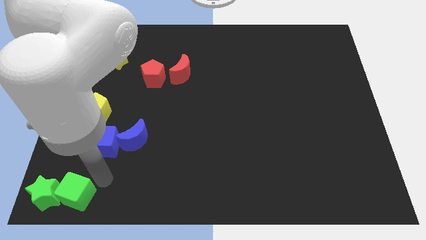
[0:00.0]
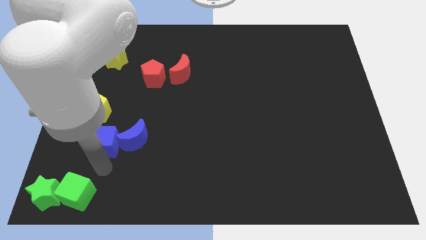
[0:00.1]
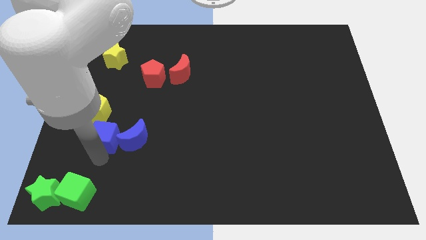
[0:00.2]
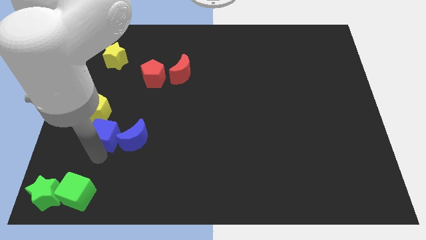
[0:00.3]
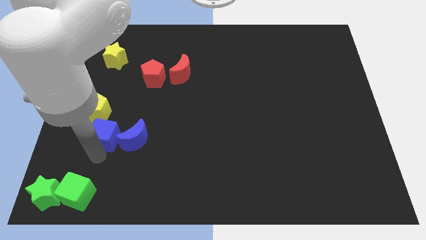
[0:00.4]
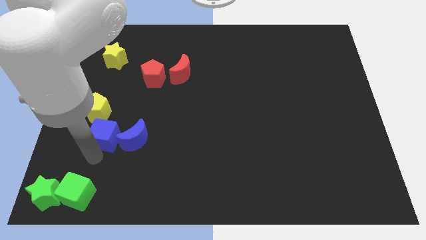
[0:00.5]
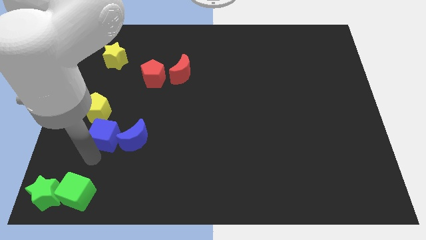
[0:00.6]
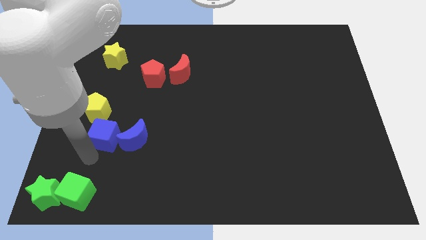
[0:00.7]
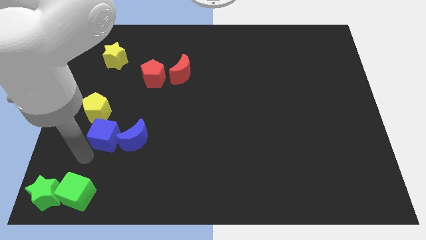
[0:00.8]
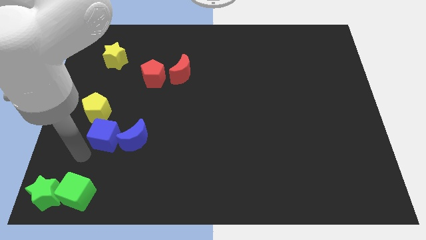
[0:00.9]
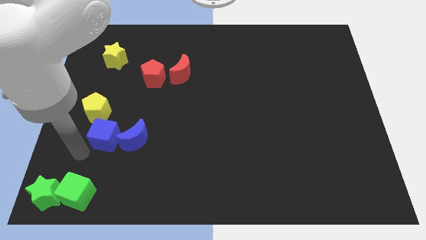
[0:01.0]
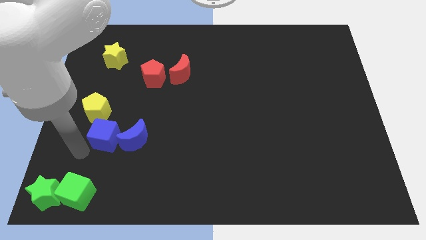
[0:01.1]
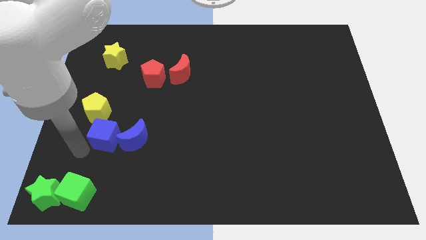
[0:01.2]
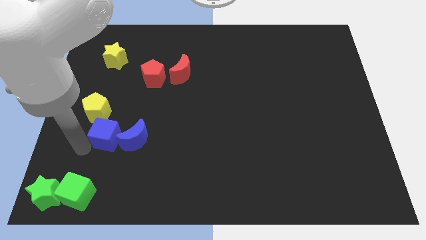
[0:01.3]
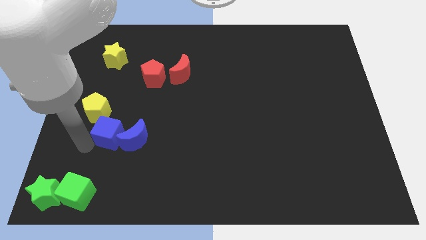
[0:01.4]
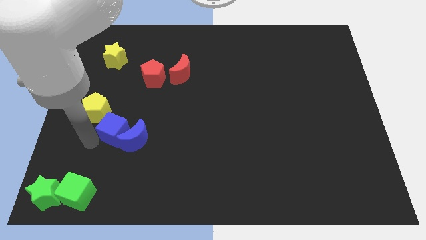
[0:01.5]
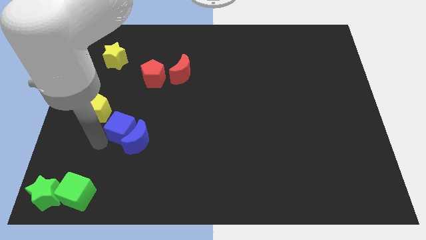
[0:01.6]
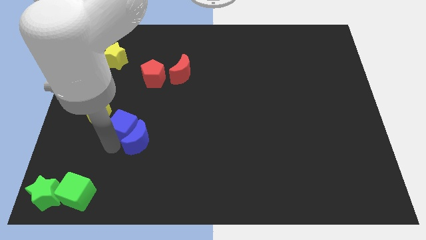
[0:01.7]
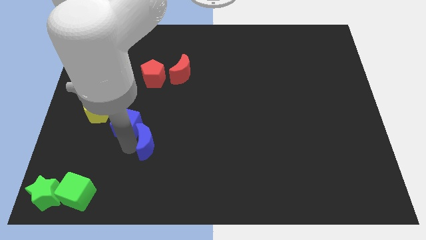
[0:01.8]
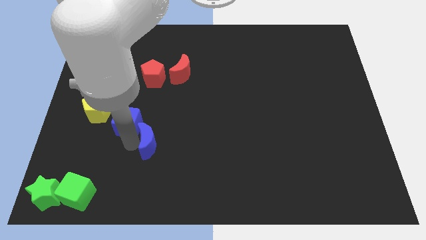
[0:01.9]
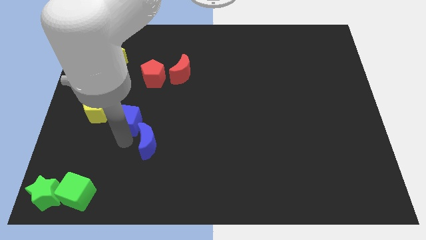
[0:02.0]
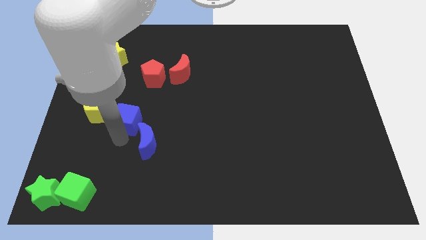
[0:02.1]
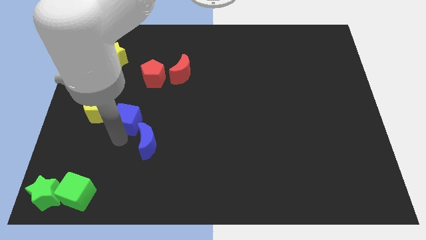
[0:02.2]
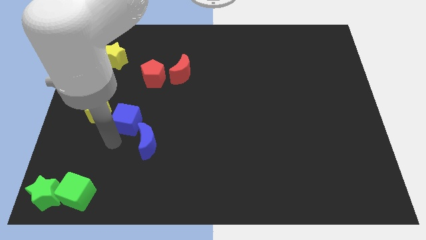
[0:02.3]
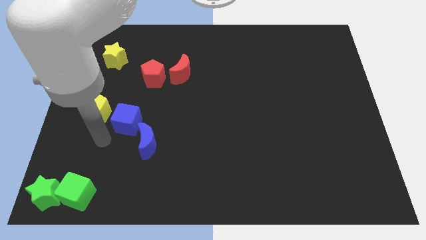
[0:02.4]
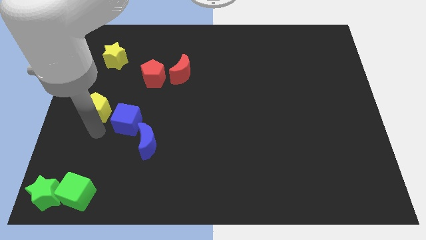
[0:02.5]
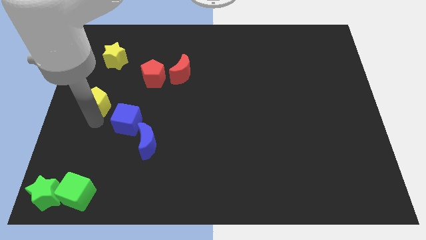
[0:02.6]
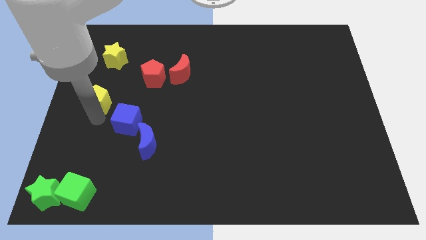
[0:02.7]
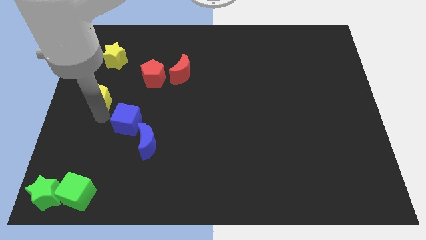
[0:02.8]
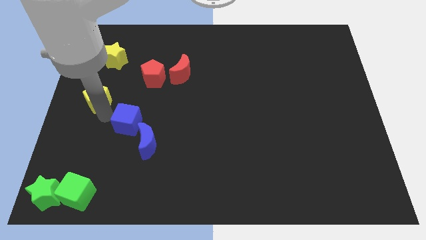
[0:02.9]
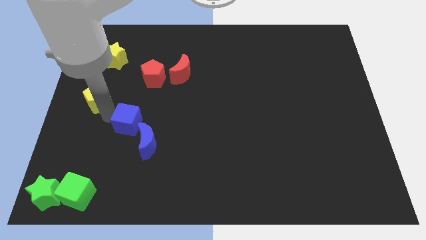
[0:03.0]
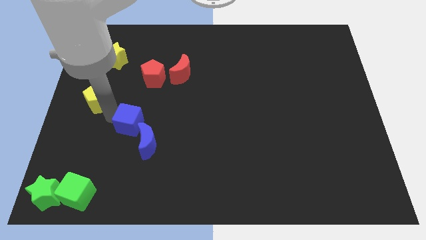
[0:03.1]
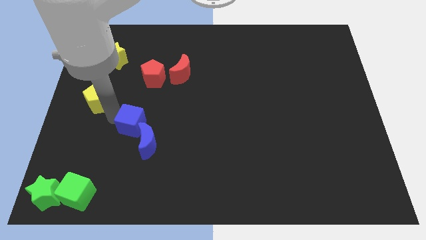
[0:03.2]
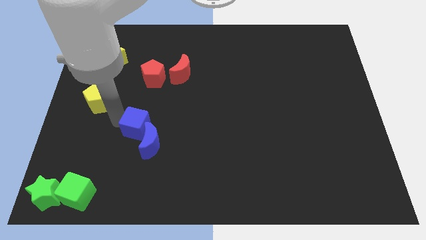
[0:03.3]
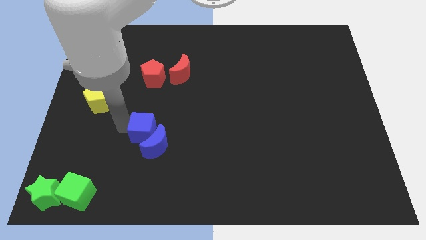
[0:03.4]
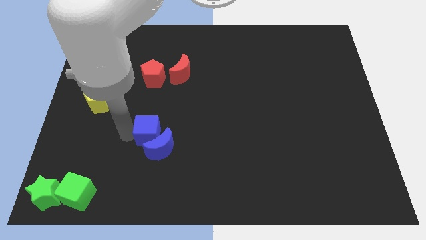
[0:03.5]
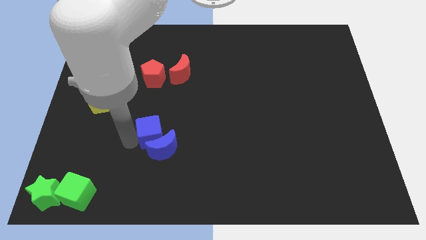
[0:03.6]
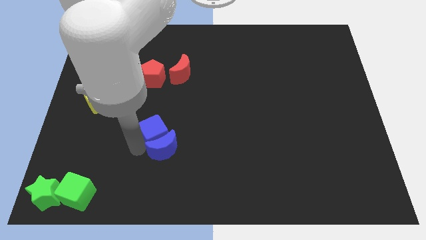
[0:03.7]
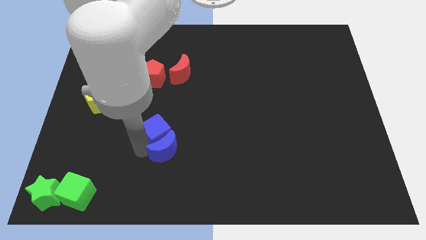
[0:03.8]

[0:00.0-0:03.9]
push blue cube below red pentagon

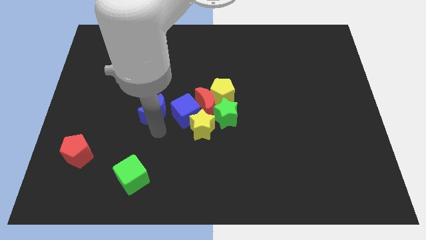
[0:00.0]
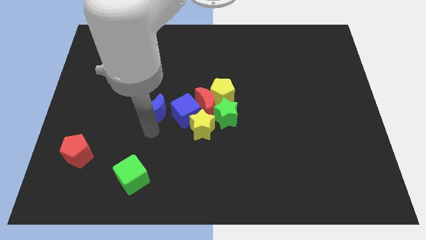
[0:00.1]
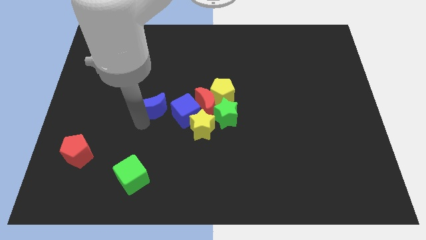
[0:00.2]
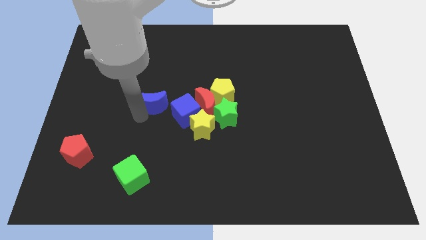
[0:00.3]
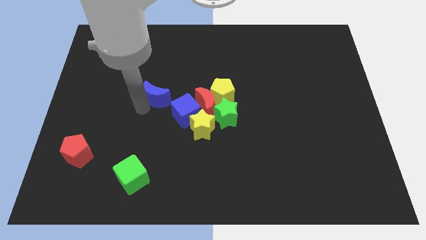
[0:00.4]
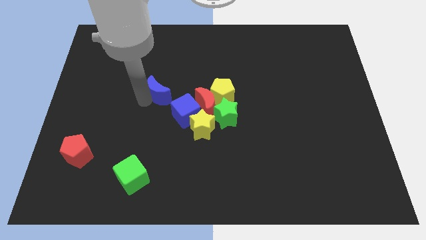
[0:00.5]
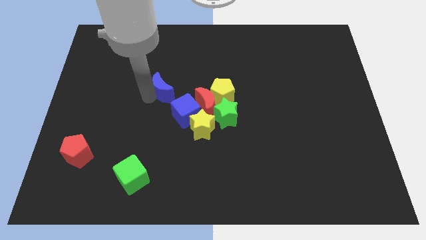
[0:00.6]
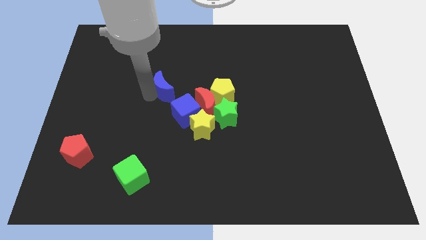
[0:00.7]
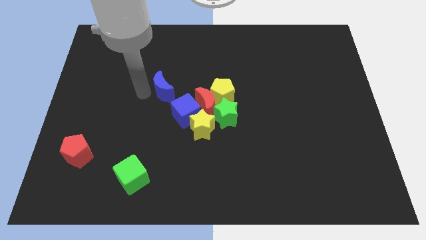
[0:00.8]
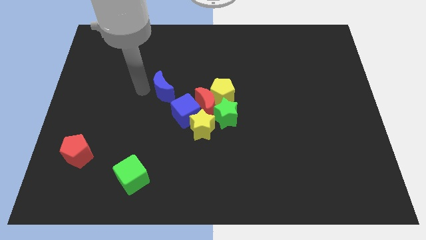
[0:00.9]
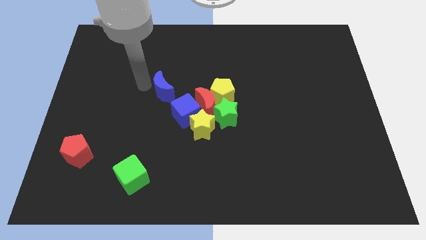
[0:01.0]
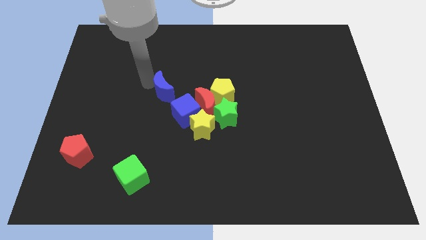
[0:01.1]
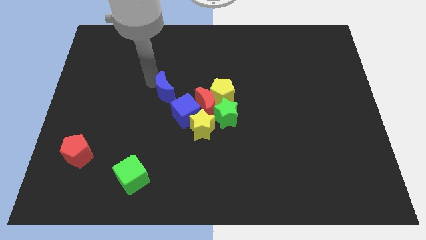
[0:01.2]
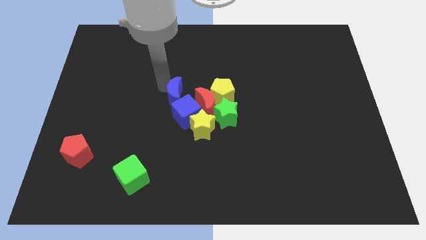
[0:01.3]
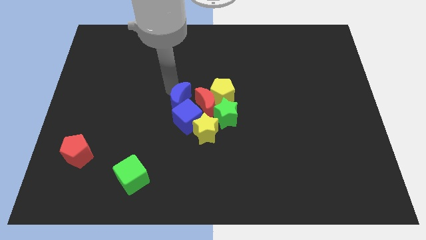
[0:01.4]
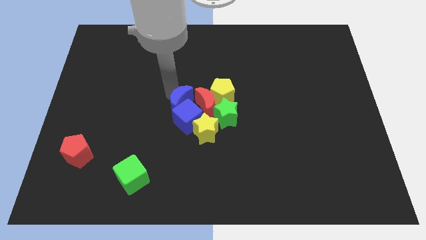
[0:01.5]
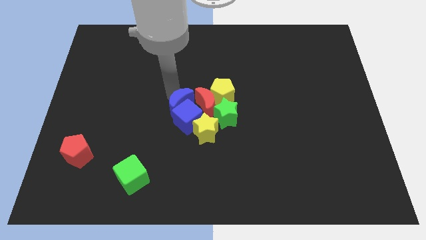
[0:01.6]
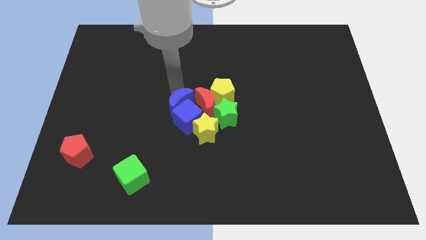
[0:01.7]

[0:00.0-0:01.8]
push the blue crescent towards the top of the blue cube

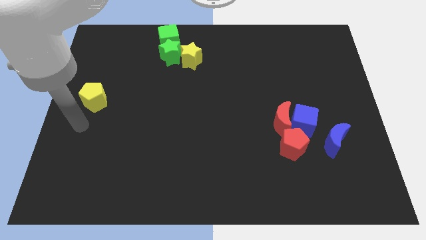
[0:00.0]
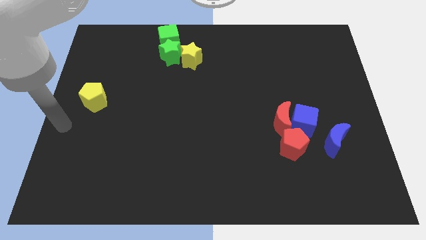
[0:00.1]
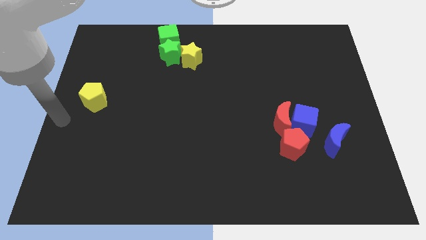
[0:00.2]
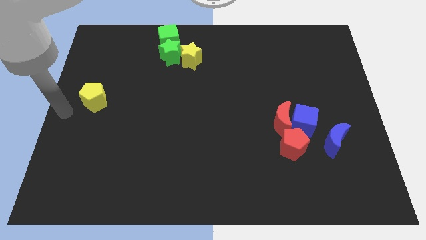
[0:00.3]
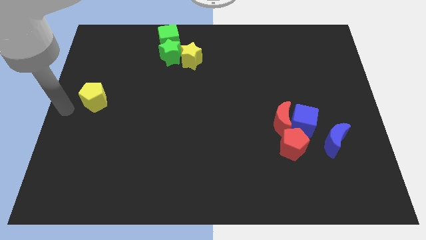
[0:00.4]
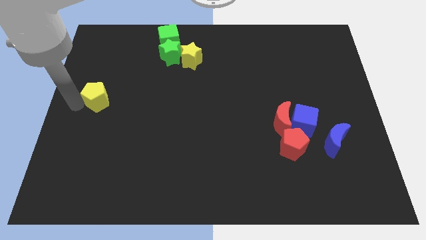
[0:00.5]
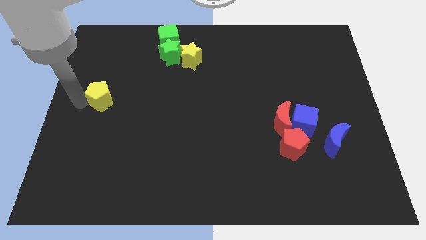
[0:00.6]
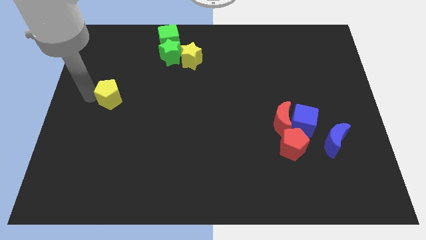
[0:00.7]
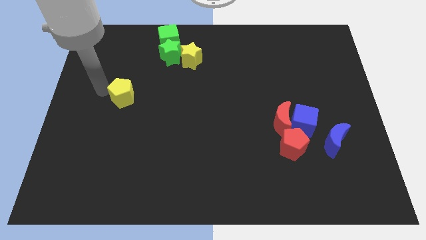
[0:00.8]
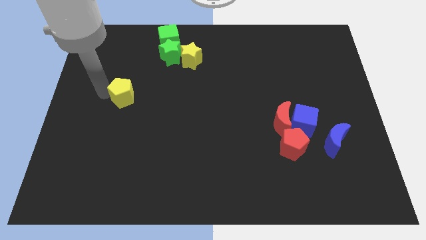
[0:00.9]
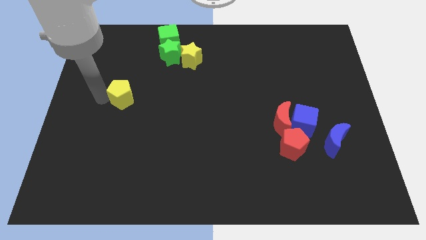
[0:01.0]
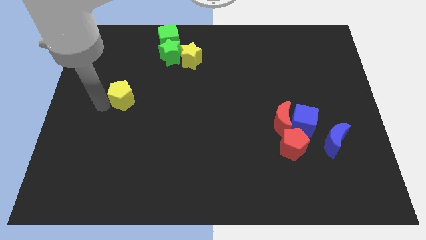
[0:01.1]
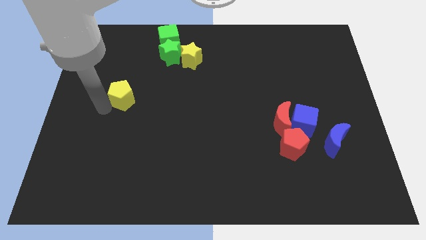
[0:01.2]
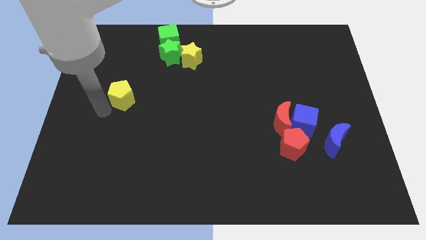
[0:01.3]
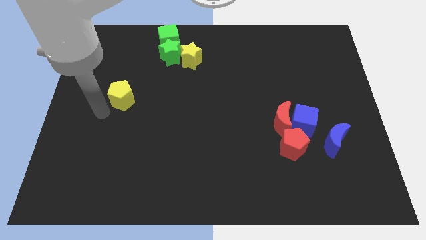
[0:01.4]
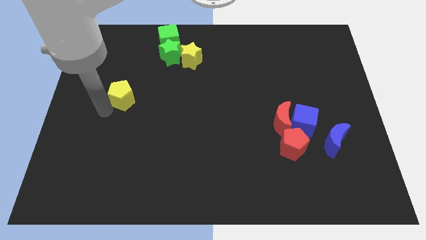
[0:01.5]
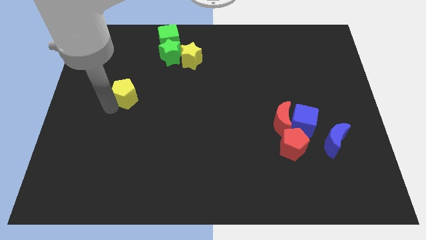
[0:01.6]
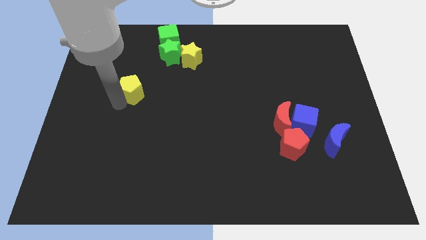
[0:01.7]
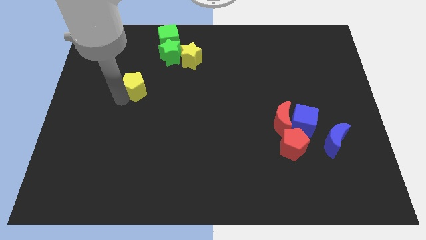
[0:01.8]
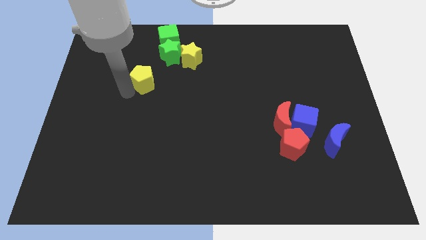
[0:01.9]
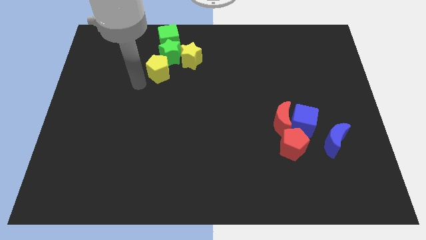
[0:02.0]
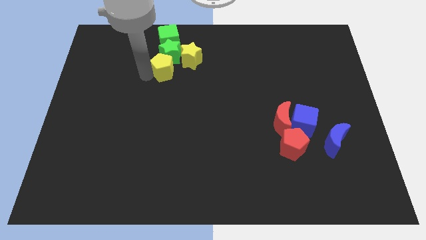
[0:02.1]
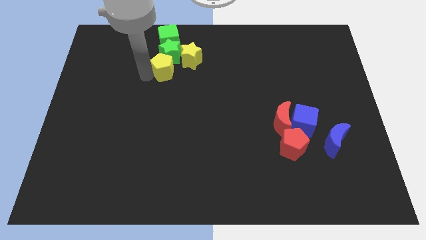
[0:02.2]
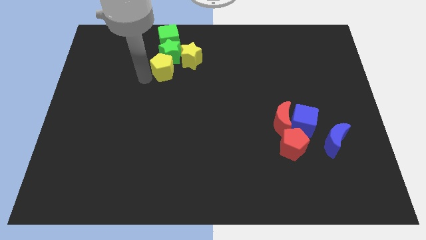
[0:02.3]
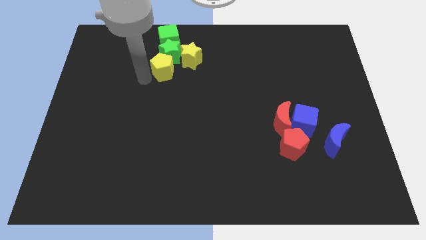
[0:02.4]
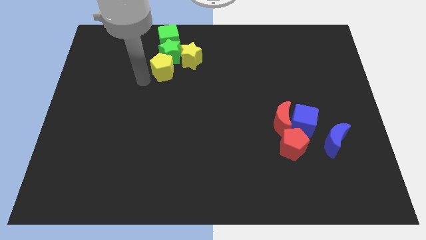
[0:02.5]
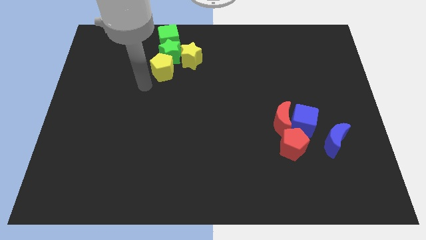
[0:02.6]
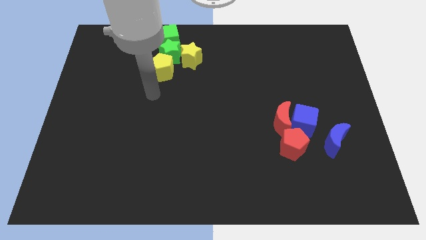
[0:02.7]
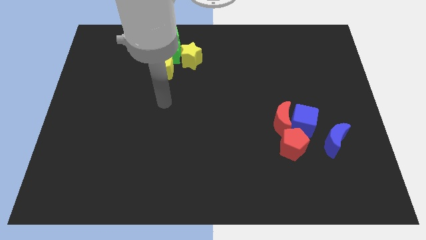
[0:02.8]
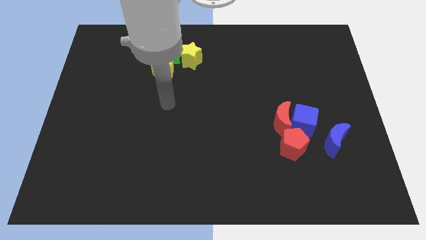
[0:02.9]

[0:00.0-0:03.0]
slide the yellow pentagon at the bottom left of the green star

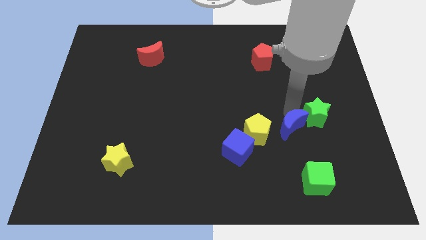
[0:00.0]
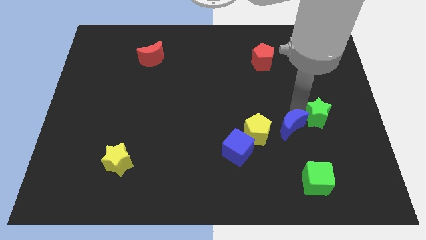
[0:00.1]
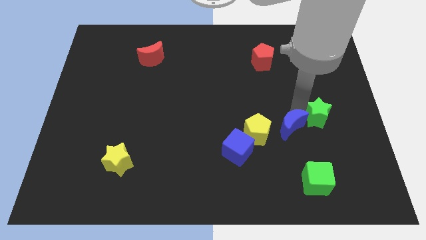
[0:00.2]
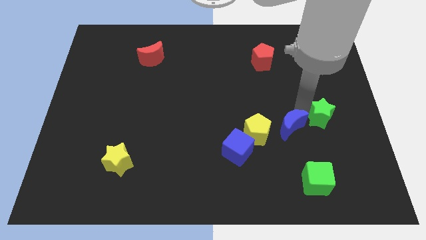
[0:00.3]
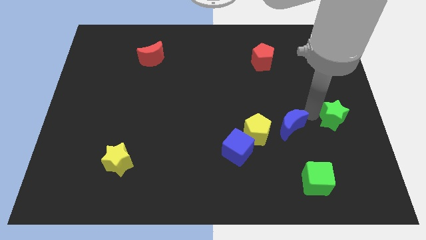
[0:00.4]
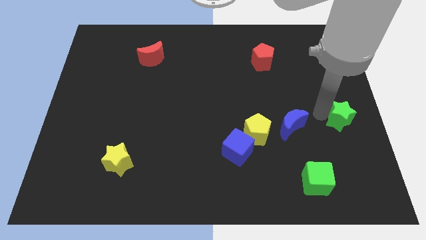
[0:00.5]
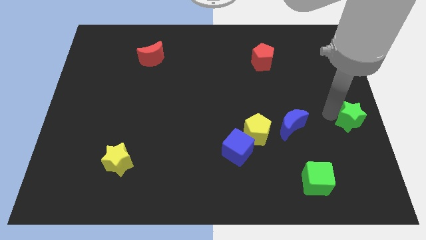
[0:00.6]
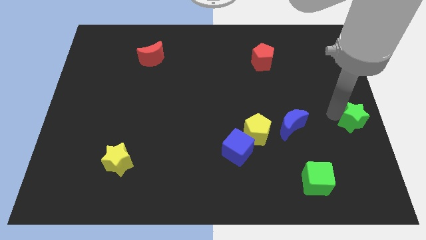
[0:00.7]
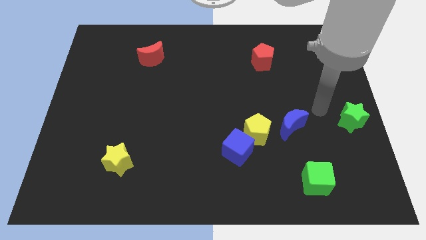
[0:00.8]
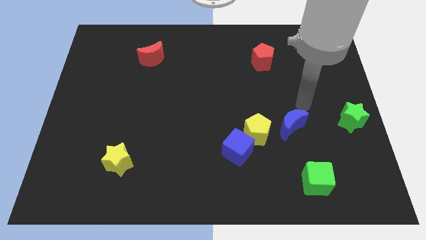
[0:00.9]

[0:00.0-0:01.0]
move the green star to the right
